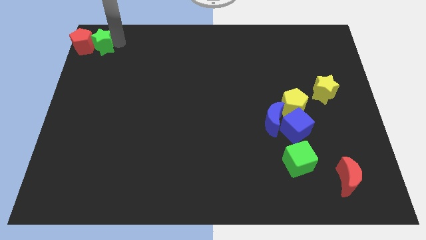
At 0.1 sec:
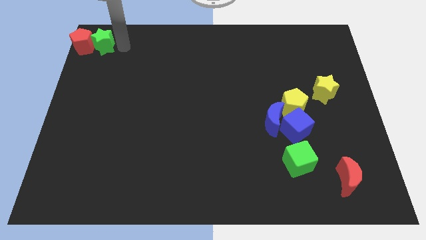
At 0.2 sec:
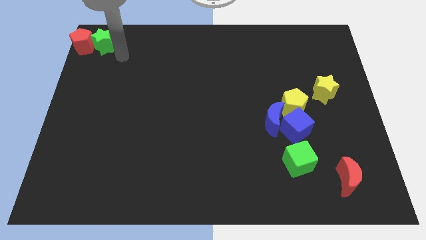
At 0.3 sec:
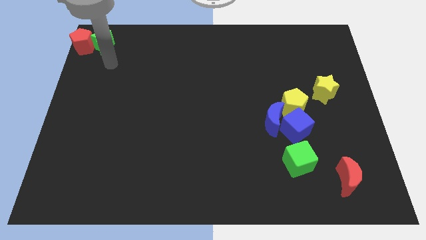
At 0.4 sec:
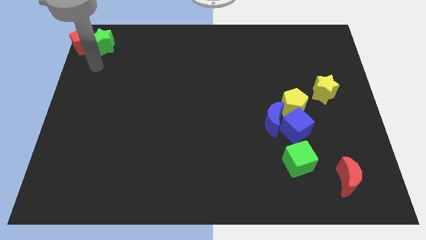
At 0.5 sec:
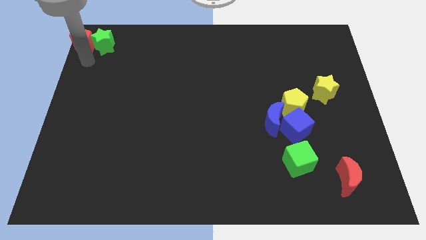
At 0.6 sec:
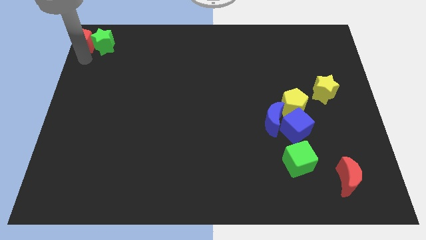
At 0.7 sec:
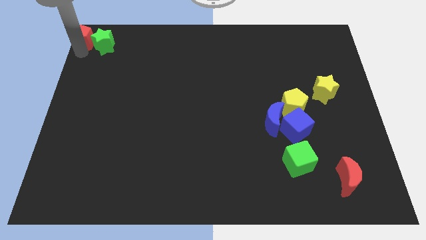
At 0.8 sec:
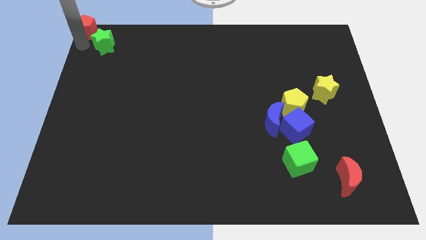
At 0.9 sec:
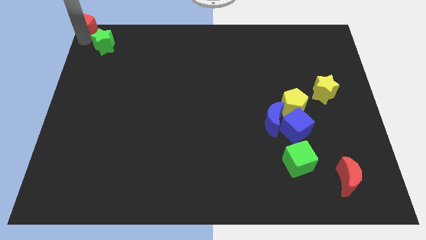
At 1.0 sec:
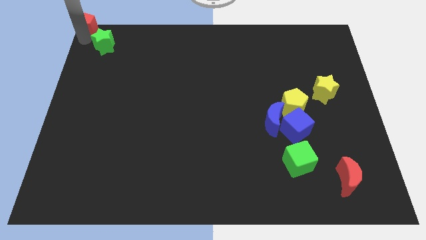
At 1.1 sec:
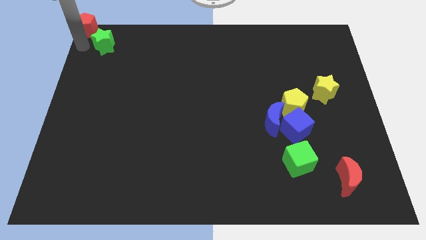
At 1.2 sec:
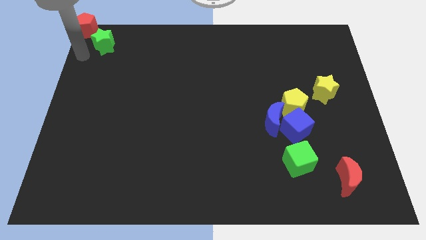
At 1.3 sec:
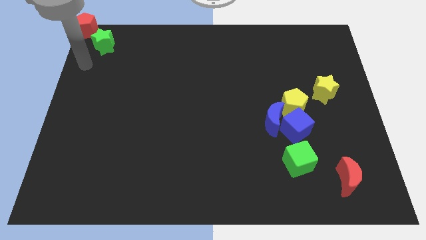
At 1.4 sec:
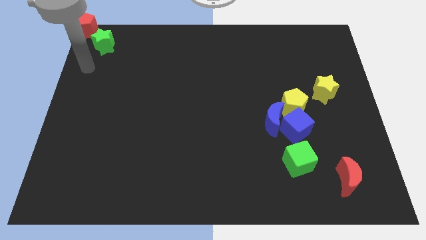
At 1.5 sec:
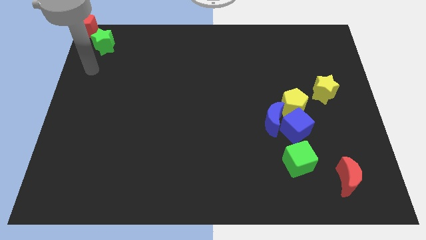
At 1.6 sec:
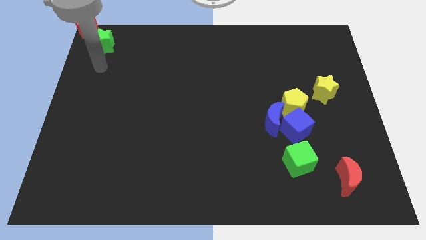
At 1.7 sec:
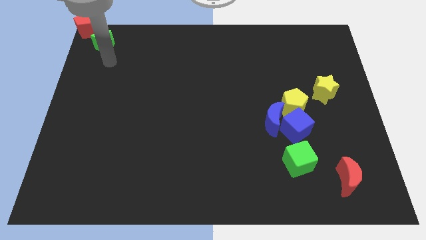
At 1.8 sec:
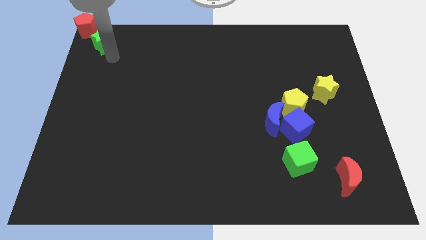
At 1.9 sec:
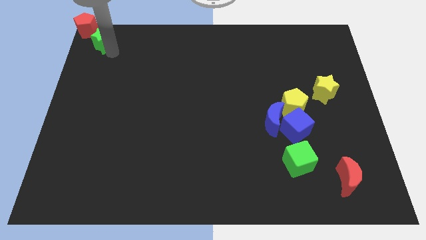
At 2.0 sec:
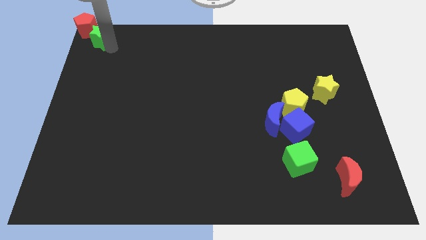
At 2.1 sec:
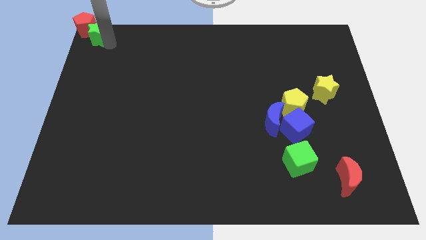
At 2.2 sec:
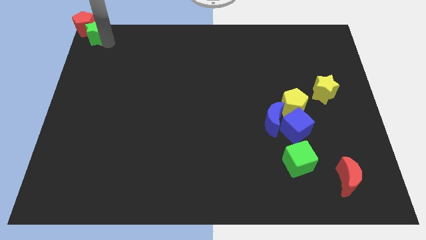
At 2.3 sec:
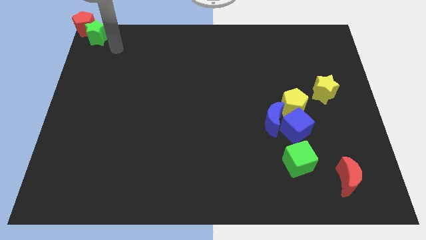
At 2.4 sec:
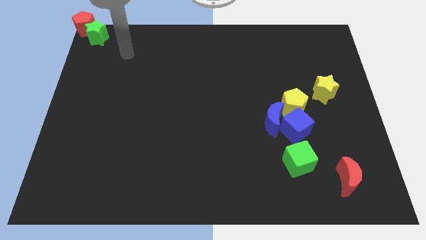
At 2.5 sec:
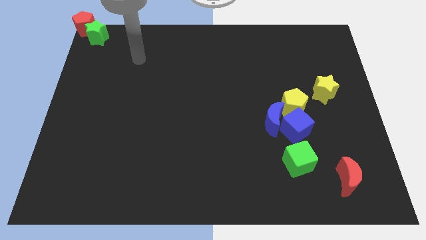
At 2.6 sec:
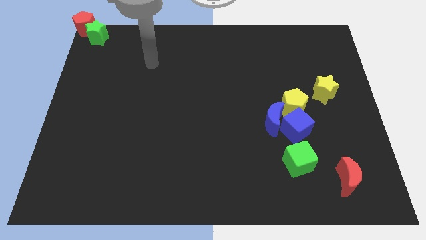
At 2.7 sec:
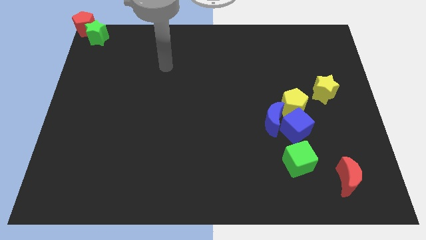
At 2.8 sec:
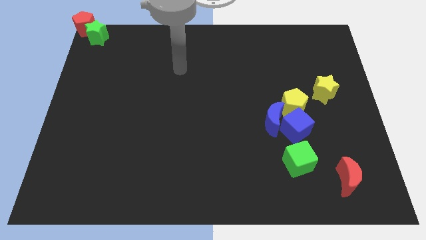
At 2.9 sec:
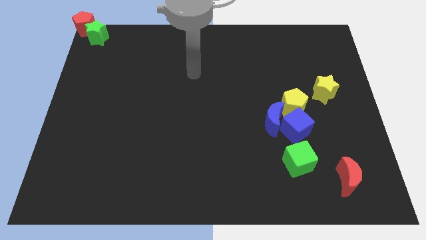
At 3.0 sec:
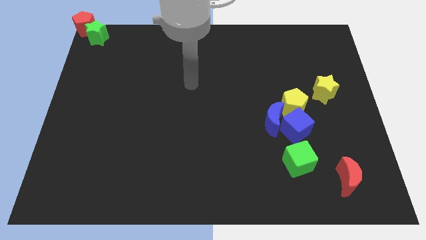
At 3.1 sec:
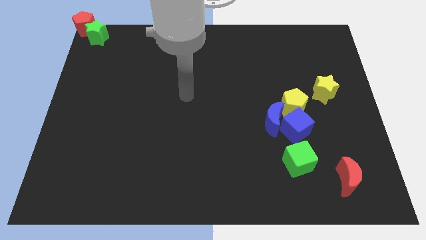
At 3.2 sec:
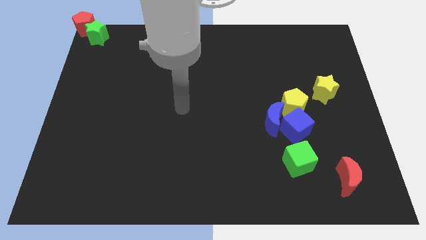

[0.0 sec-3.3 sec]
drag green star in to red pentagon

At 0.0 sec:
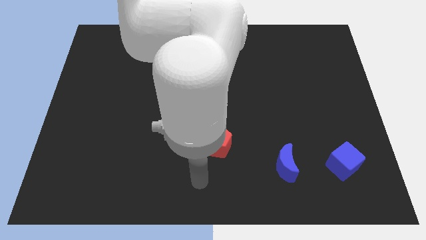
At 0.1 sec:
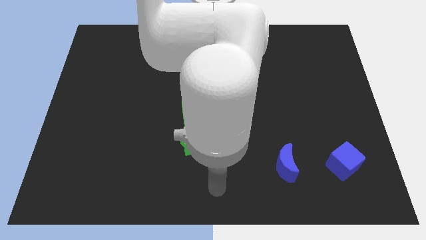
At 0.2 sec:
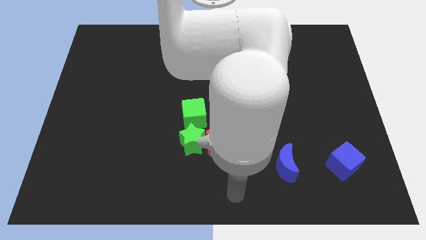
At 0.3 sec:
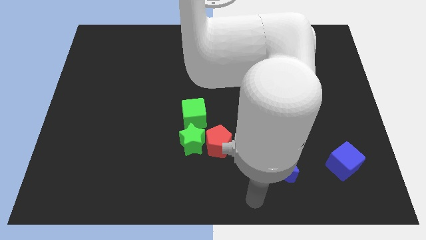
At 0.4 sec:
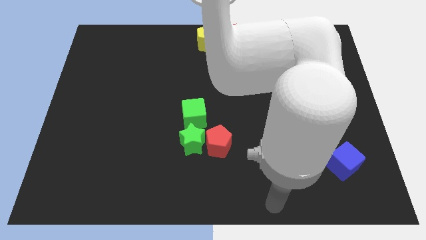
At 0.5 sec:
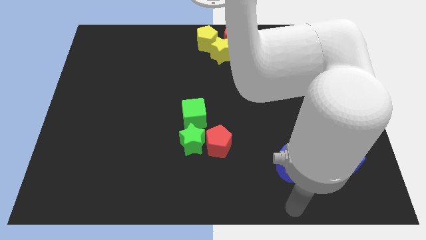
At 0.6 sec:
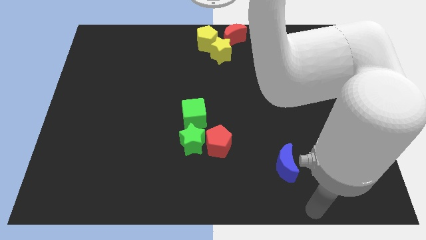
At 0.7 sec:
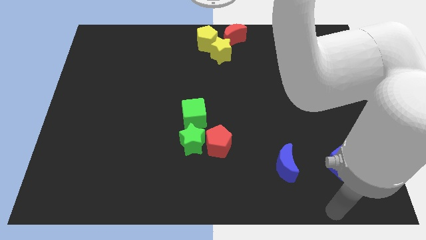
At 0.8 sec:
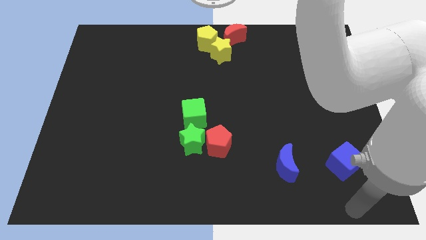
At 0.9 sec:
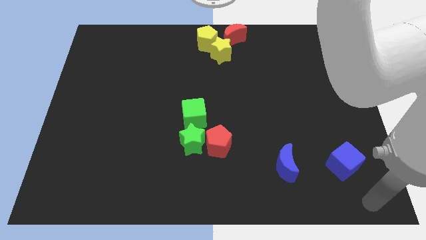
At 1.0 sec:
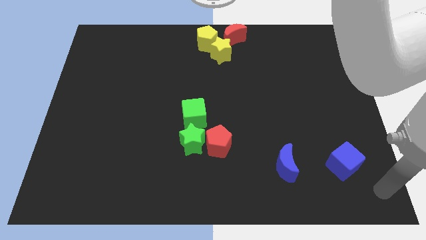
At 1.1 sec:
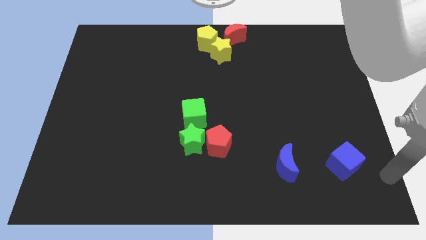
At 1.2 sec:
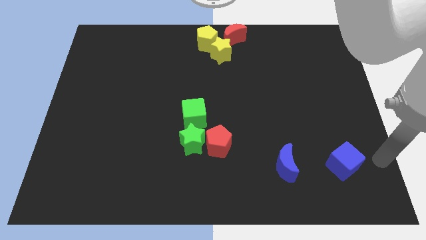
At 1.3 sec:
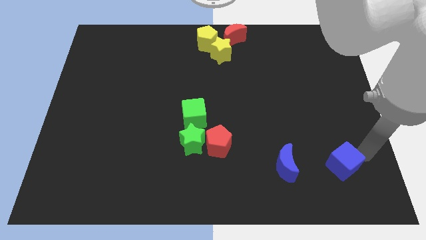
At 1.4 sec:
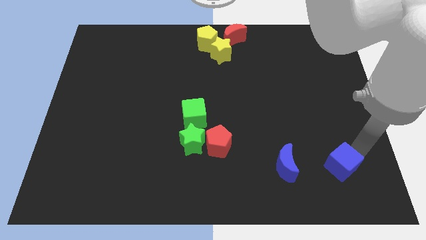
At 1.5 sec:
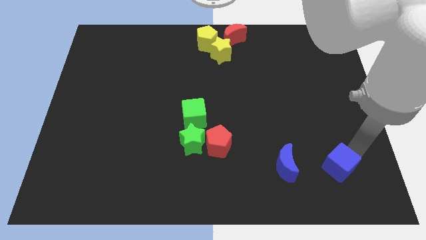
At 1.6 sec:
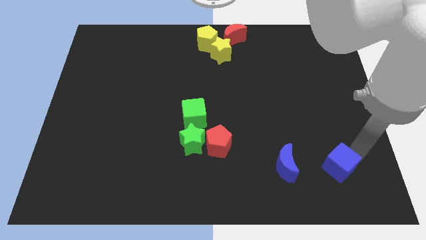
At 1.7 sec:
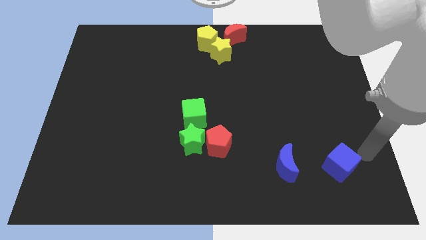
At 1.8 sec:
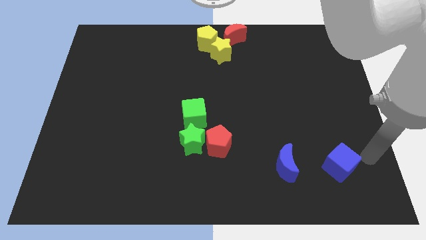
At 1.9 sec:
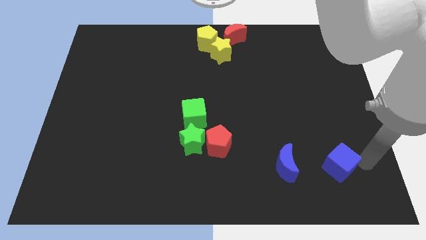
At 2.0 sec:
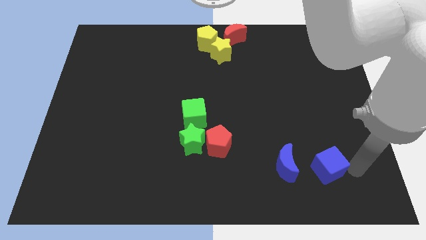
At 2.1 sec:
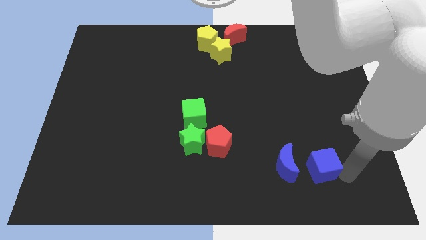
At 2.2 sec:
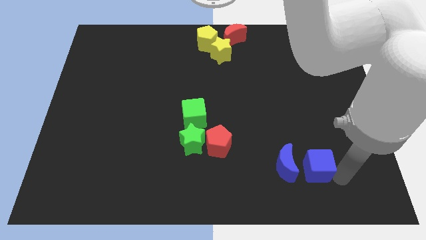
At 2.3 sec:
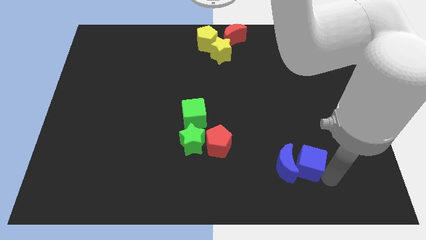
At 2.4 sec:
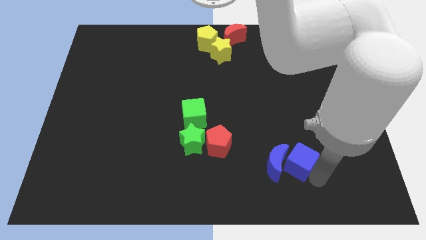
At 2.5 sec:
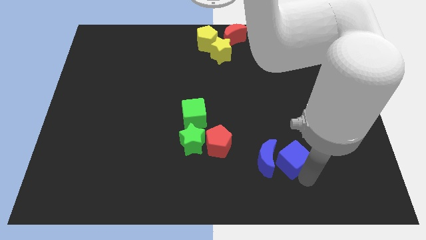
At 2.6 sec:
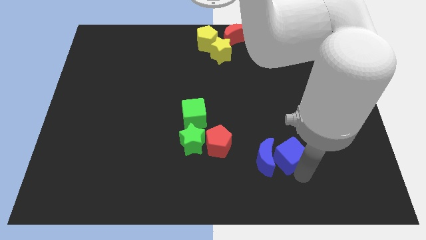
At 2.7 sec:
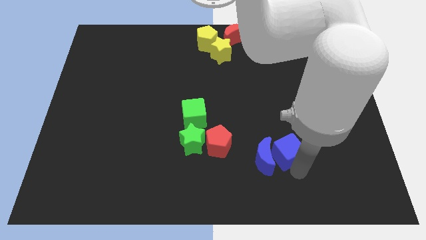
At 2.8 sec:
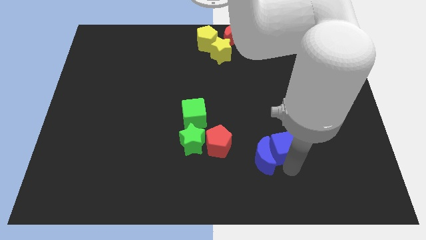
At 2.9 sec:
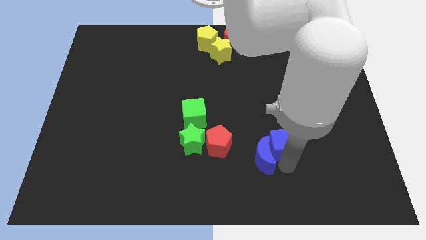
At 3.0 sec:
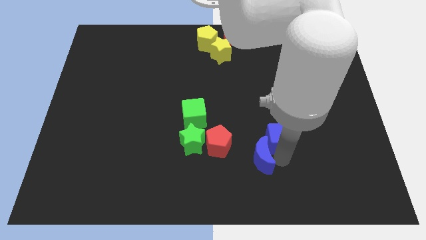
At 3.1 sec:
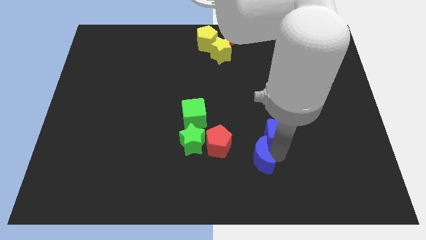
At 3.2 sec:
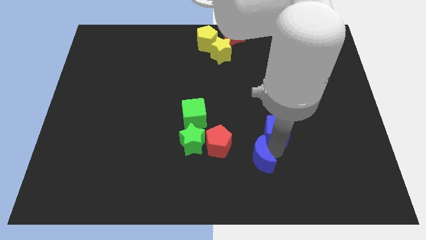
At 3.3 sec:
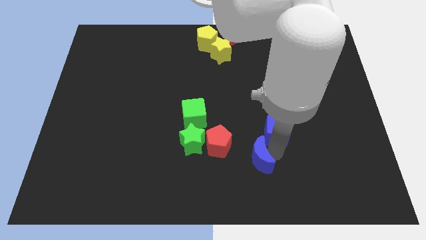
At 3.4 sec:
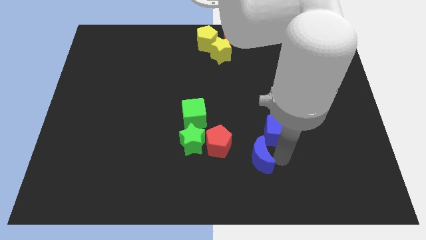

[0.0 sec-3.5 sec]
move the blue cube into the blue moon

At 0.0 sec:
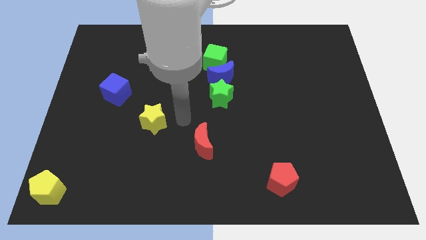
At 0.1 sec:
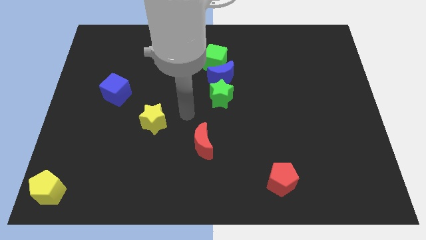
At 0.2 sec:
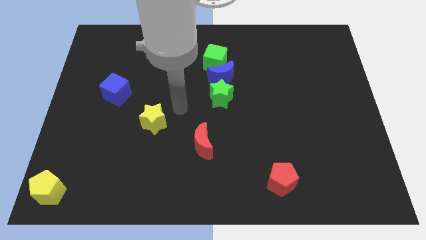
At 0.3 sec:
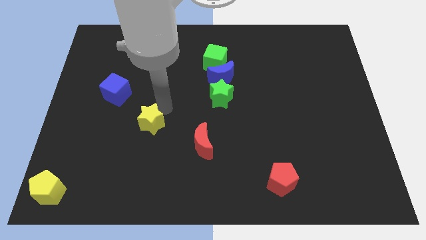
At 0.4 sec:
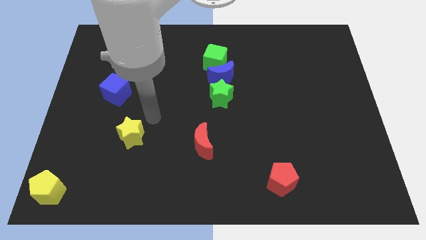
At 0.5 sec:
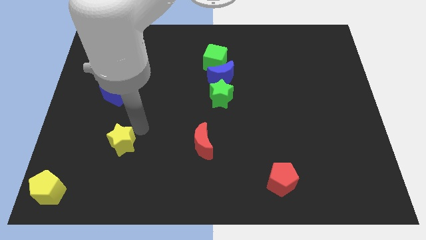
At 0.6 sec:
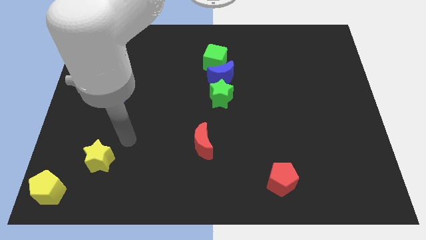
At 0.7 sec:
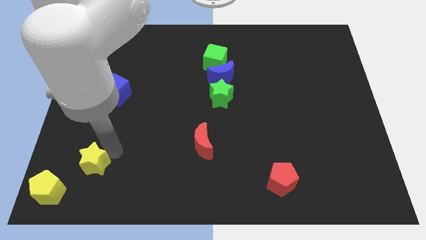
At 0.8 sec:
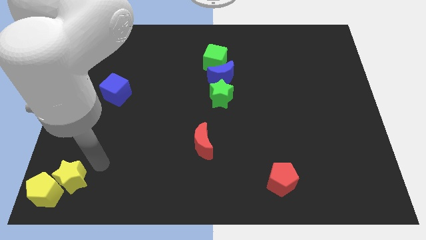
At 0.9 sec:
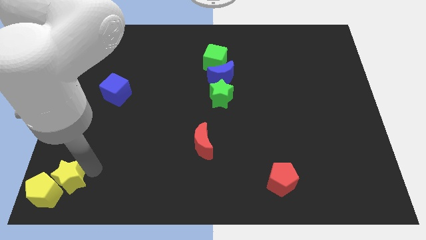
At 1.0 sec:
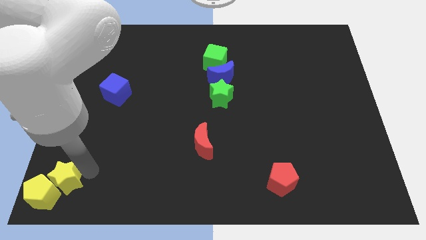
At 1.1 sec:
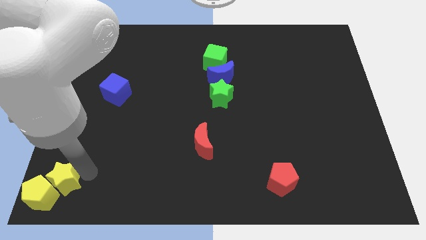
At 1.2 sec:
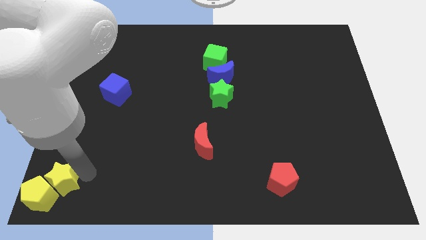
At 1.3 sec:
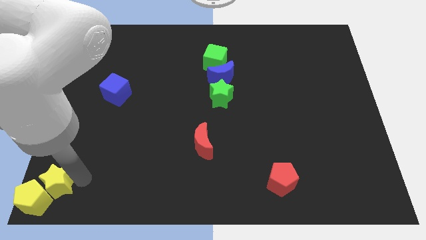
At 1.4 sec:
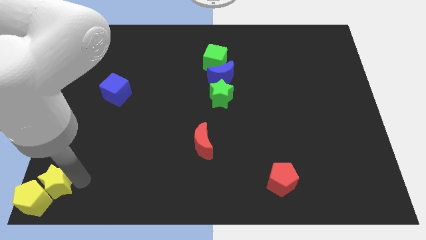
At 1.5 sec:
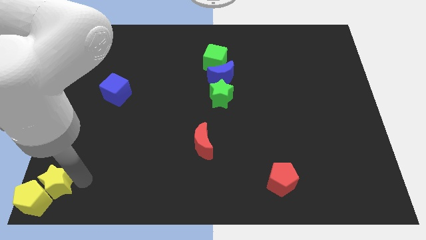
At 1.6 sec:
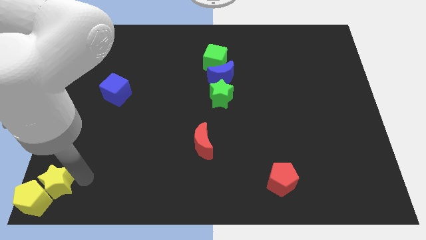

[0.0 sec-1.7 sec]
push the yellow star into the yellow pentagon

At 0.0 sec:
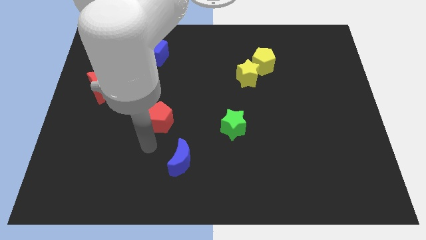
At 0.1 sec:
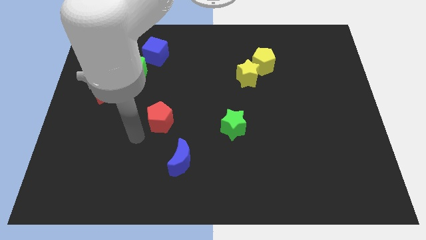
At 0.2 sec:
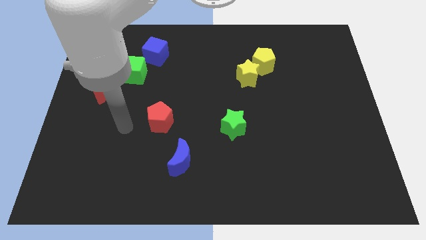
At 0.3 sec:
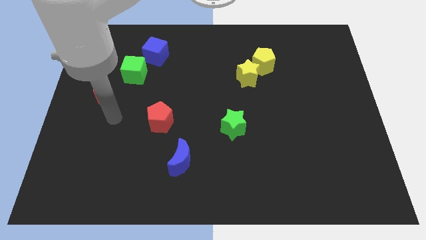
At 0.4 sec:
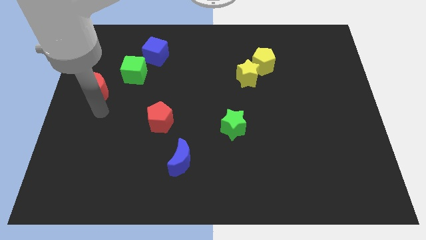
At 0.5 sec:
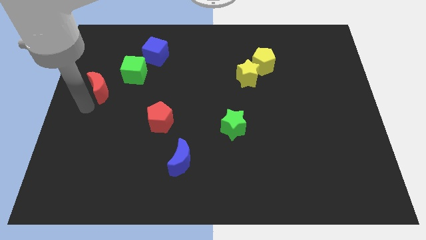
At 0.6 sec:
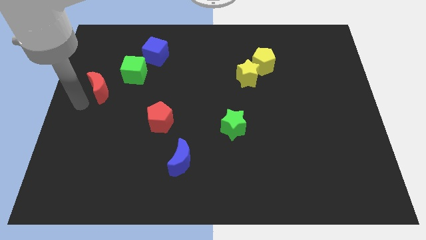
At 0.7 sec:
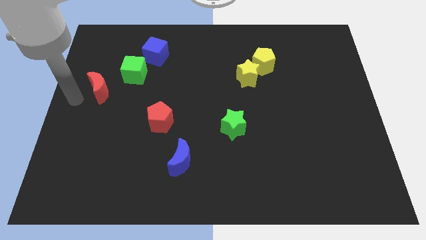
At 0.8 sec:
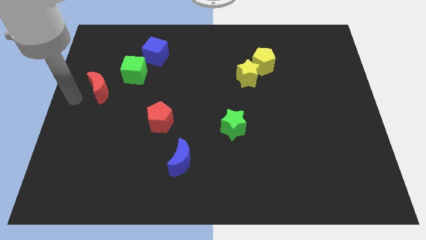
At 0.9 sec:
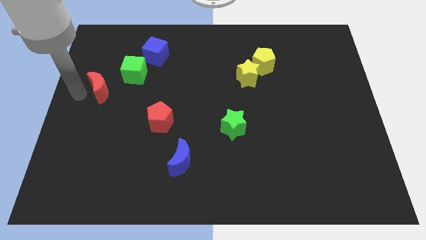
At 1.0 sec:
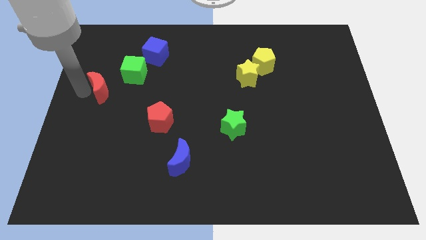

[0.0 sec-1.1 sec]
point your arm at the left of the red crescent
